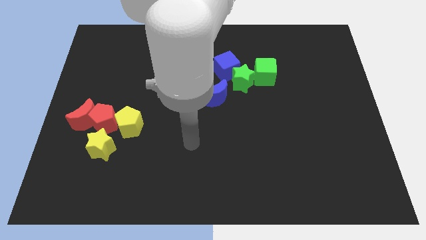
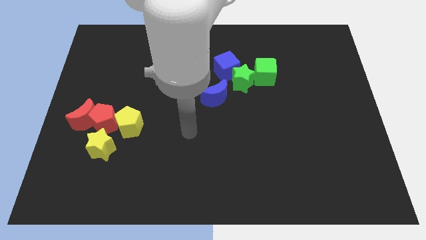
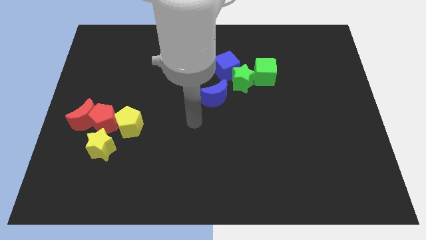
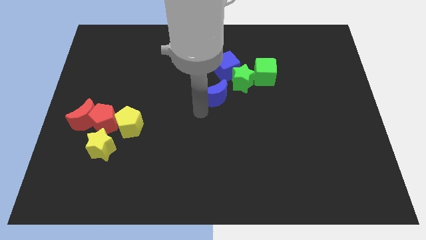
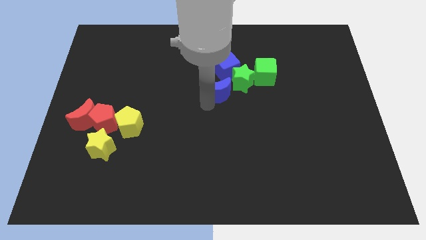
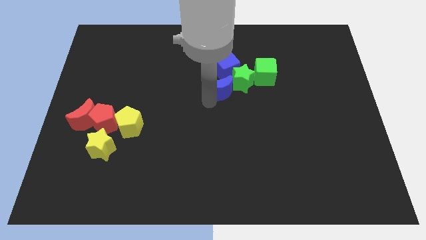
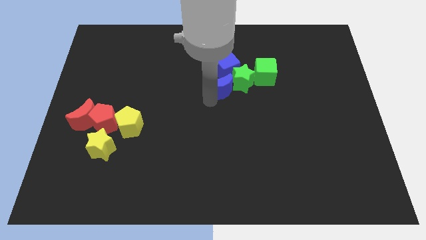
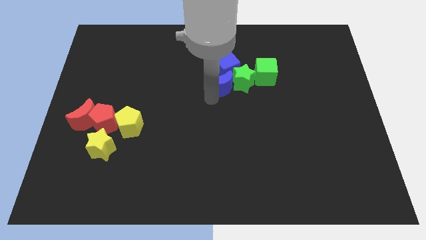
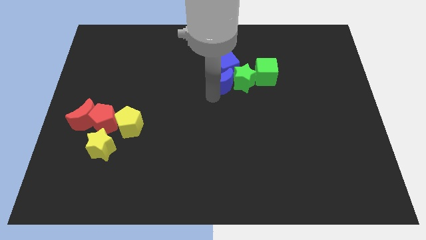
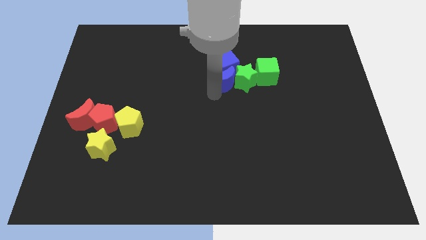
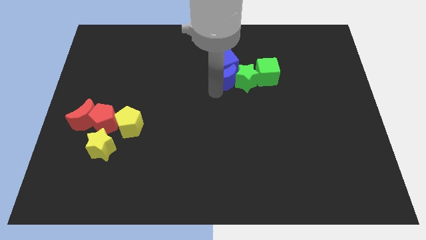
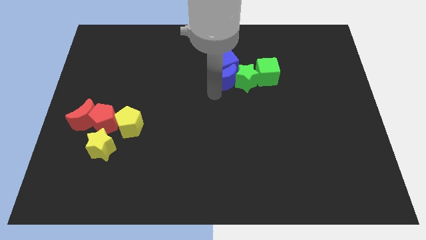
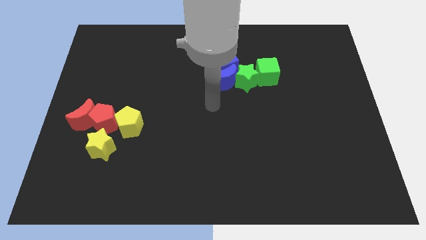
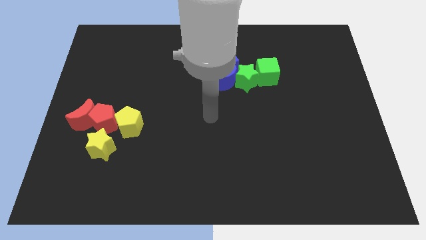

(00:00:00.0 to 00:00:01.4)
push the blue moon into the blue cube

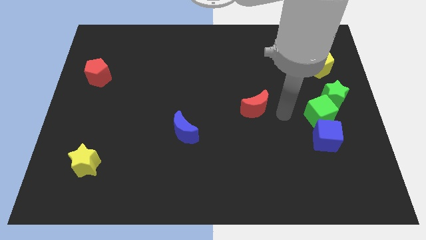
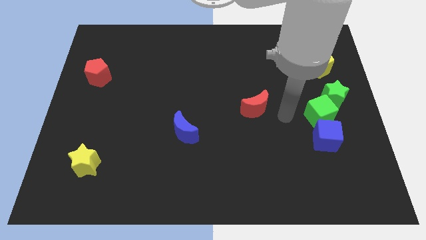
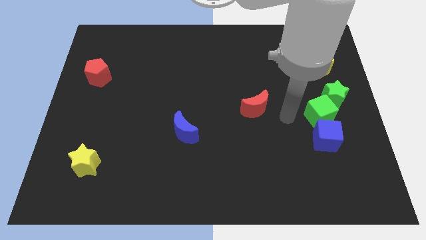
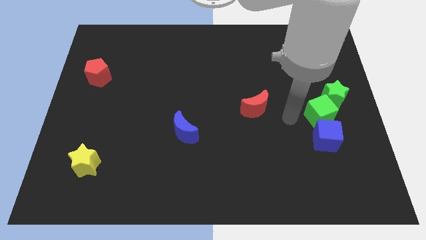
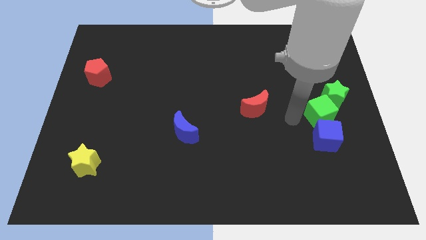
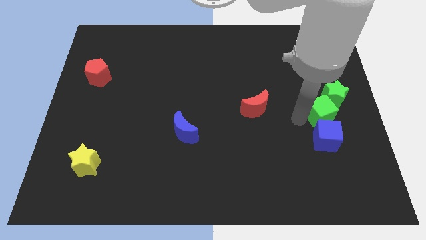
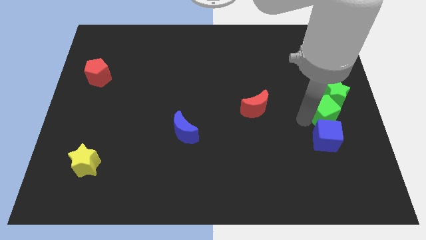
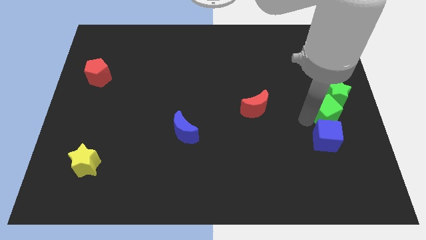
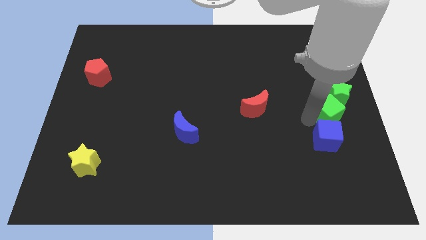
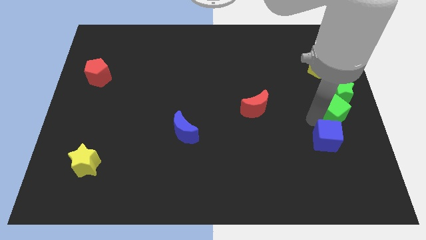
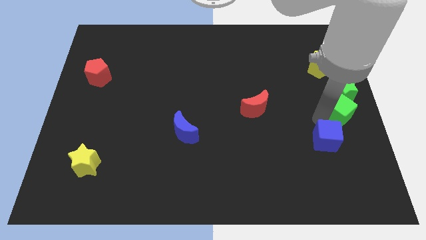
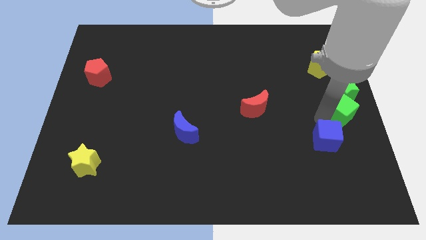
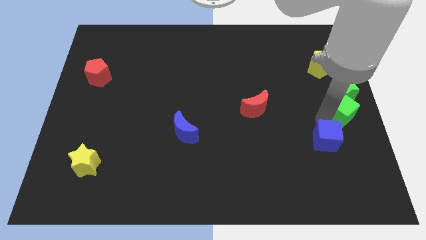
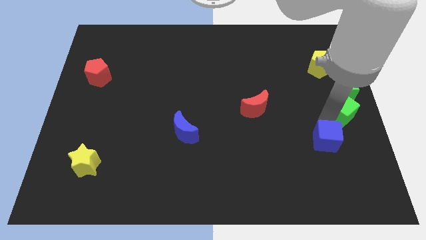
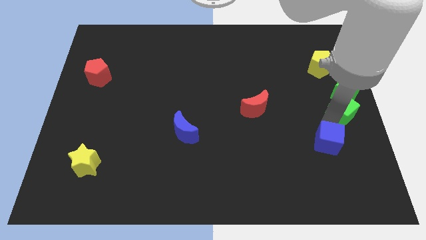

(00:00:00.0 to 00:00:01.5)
push the green cube towards right side of the board

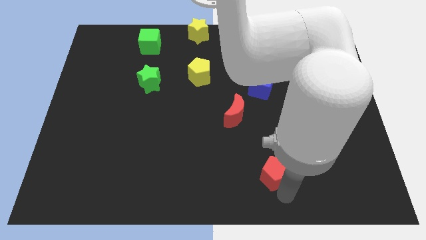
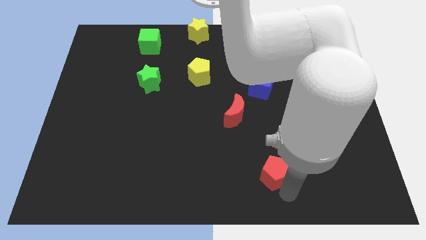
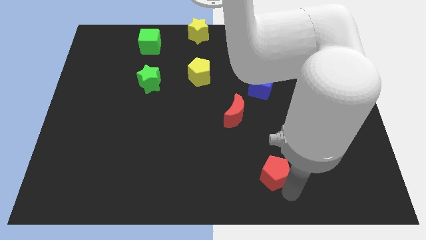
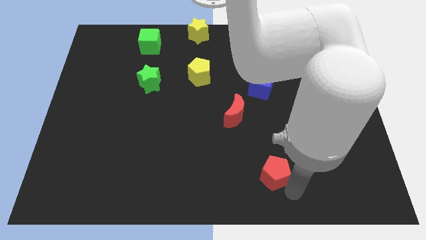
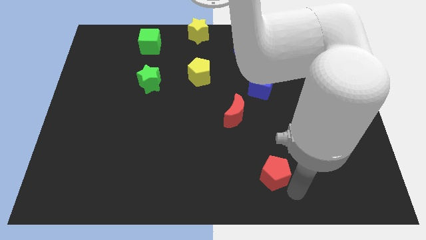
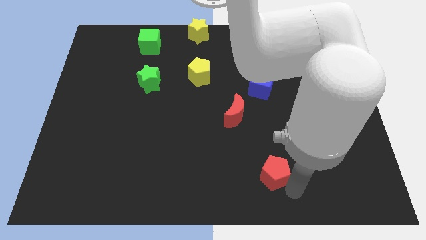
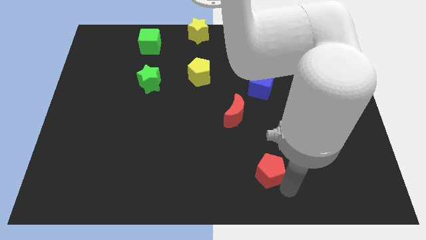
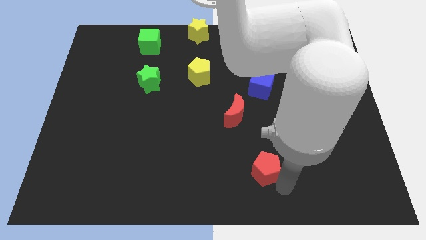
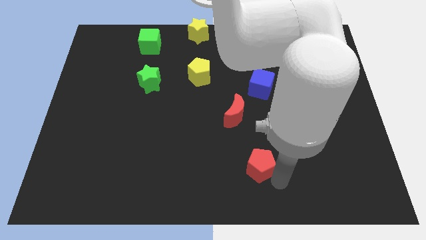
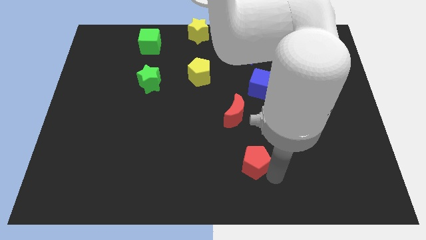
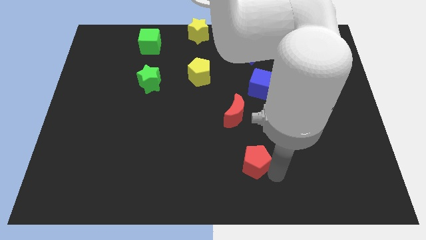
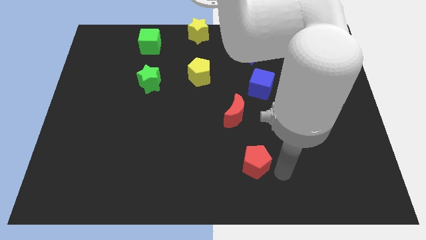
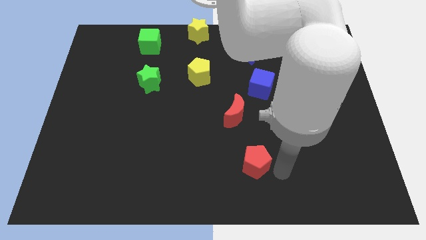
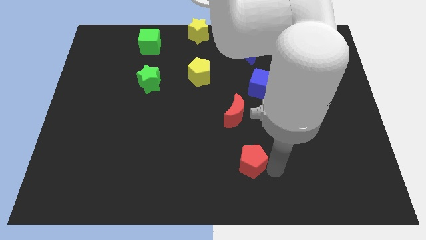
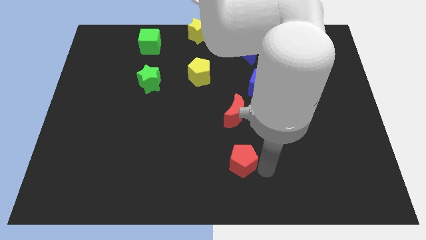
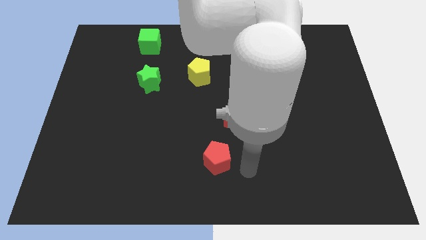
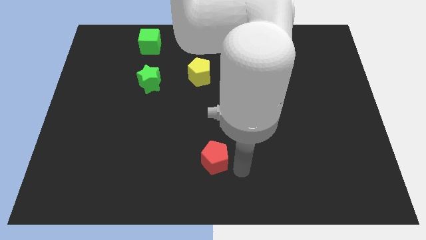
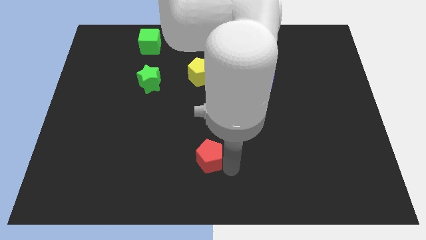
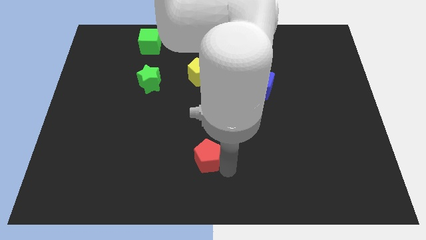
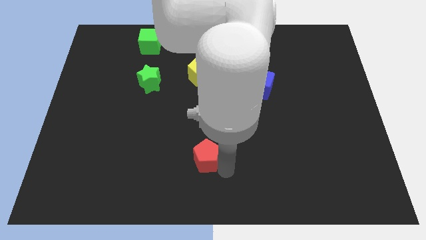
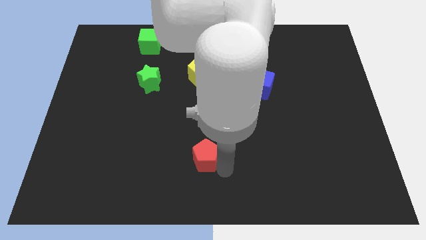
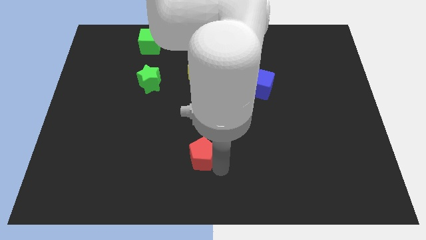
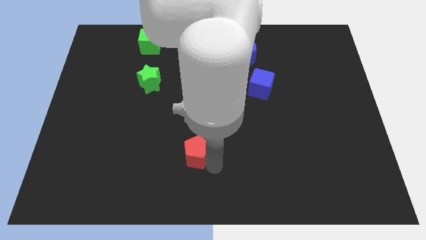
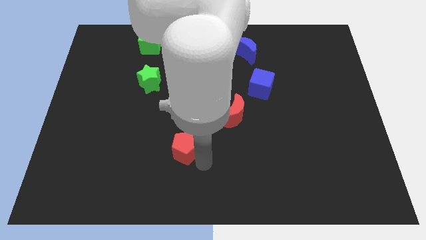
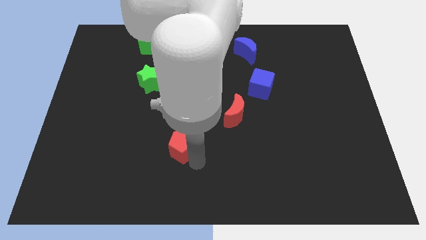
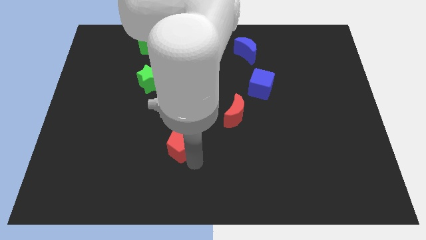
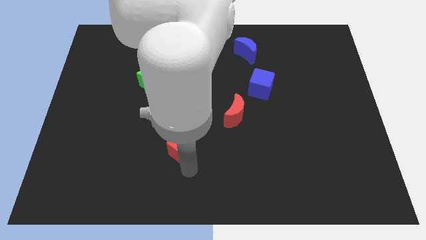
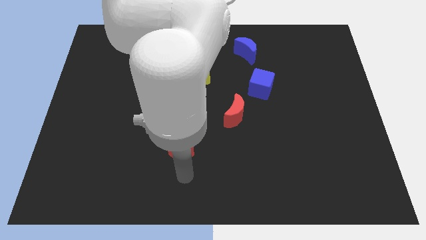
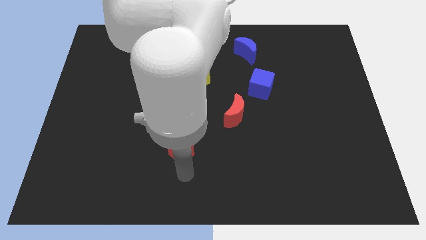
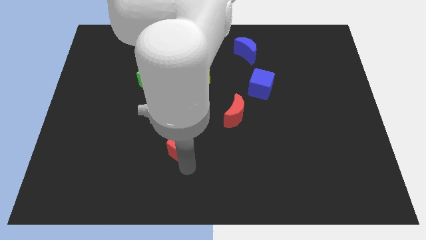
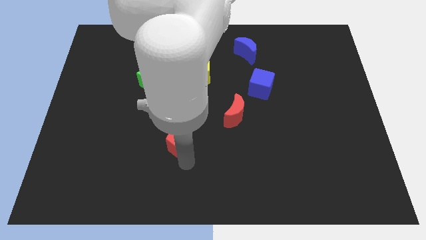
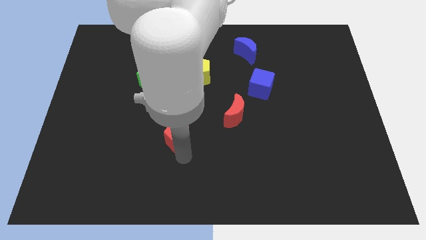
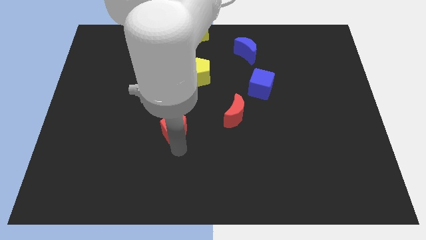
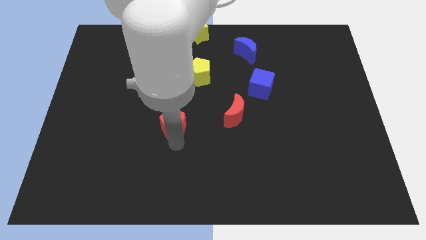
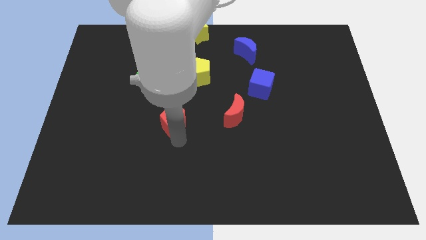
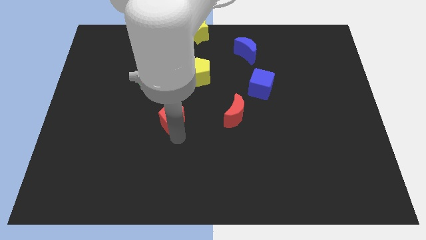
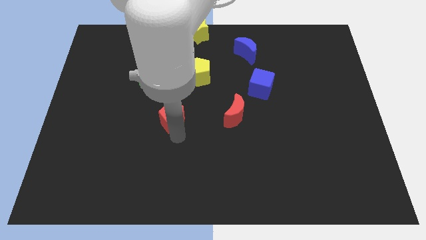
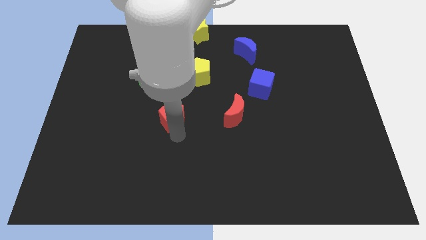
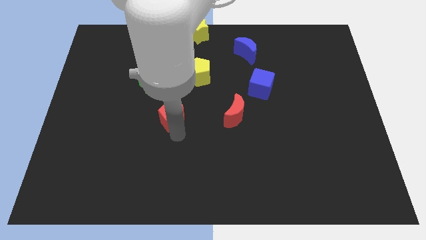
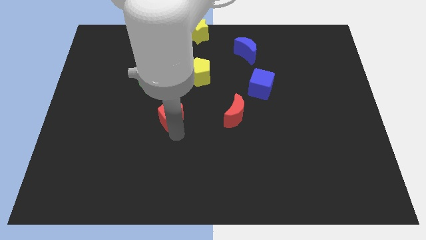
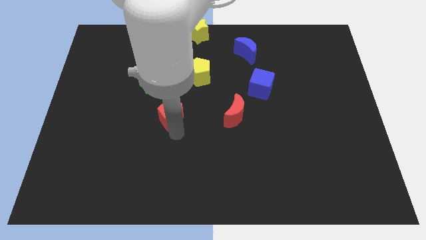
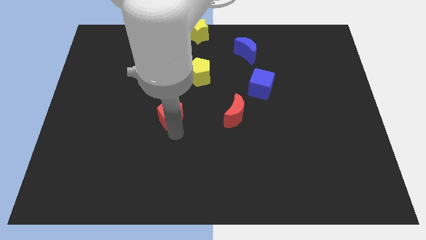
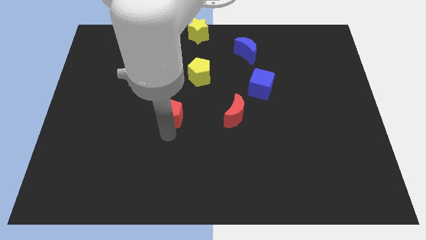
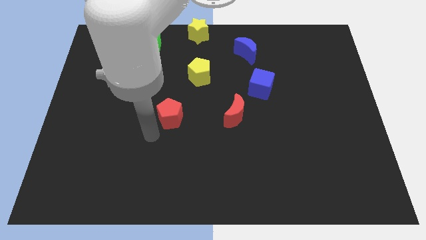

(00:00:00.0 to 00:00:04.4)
move the red pentagon horizontal to the red crescent

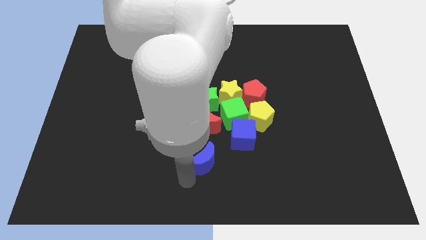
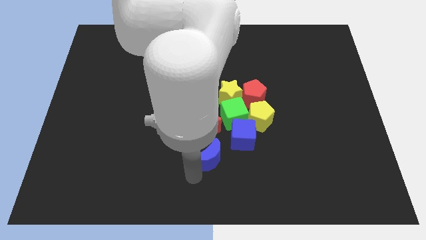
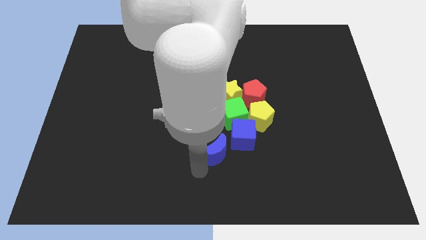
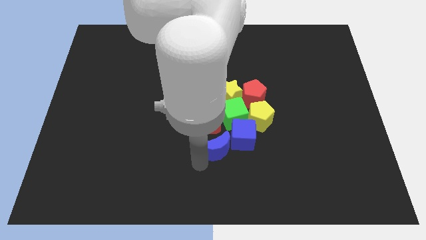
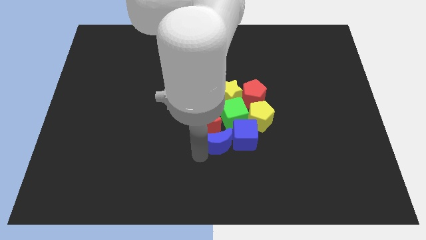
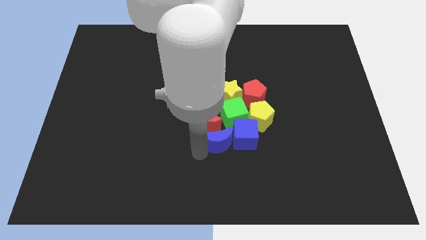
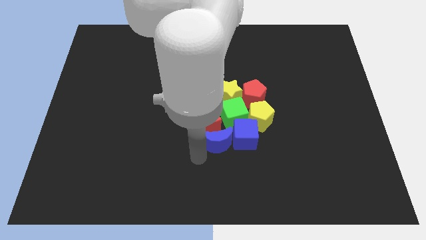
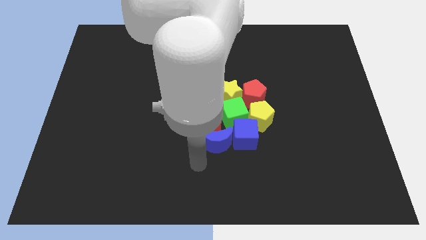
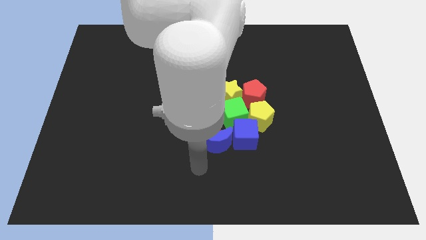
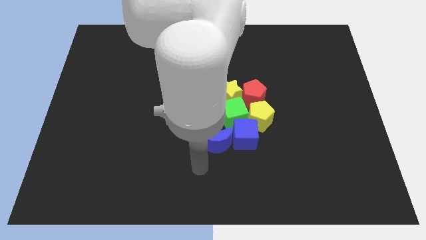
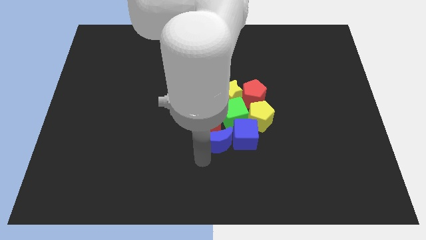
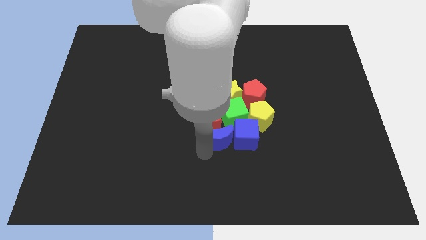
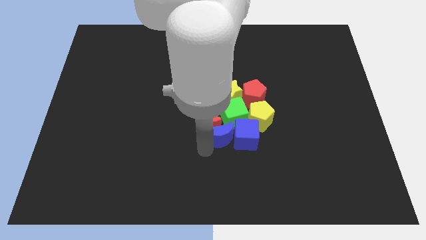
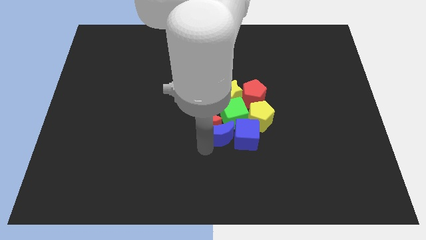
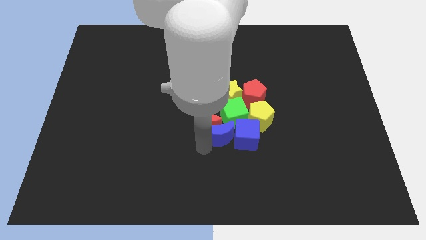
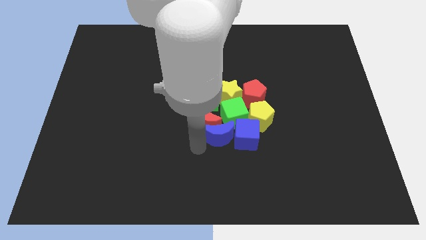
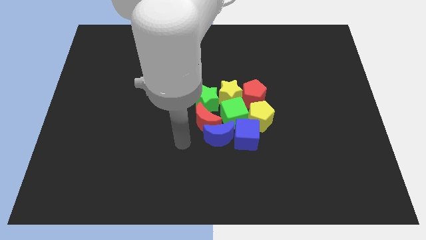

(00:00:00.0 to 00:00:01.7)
push the blue crescent into the bottom of red crescent
